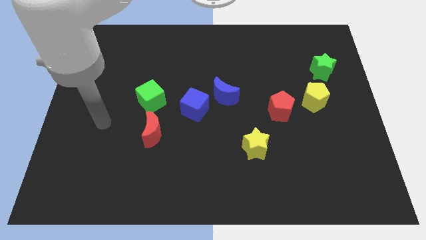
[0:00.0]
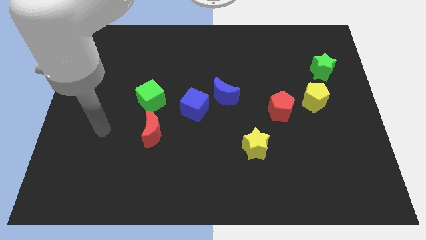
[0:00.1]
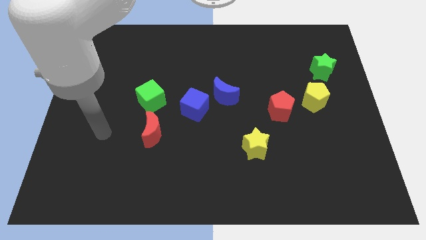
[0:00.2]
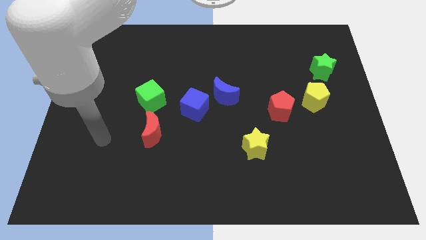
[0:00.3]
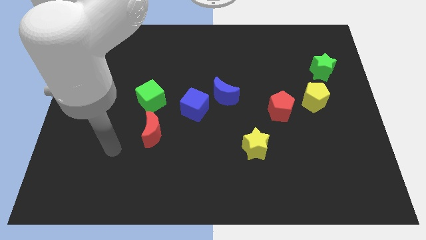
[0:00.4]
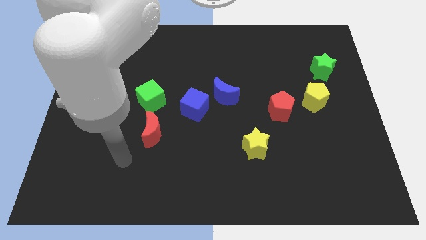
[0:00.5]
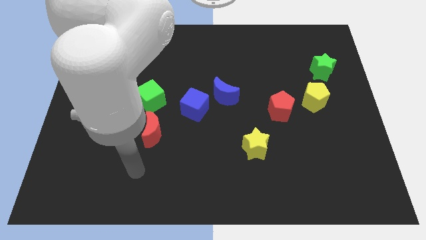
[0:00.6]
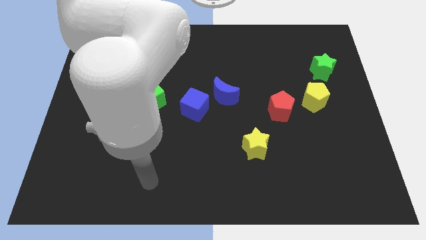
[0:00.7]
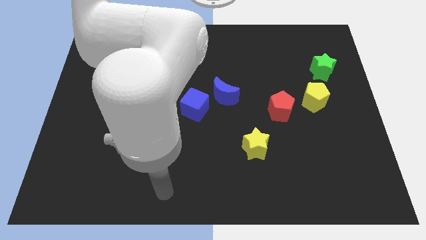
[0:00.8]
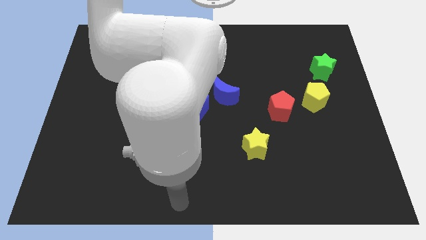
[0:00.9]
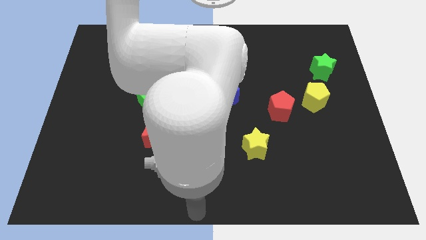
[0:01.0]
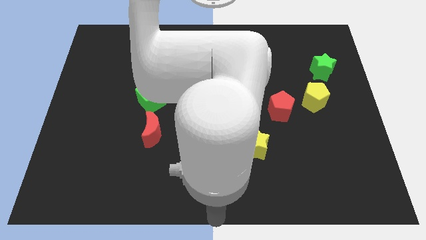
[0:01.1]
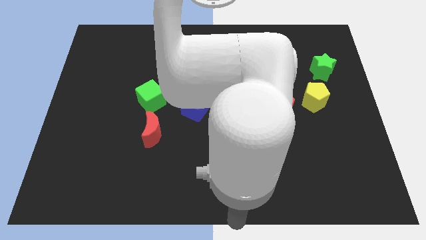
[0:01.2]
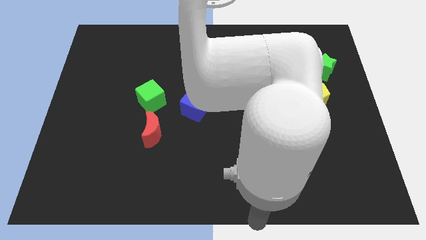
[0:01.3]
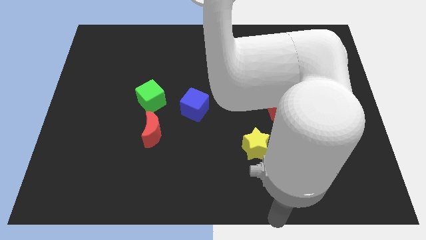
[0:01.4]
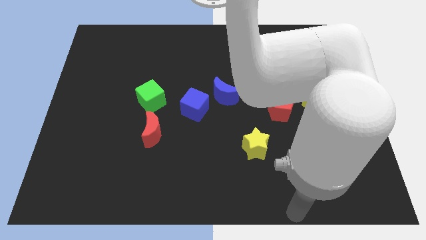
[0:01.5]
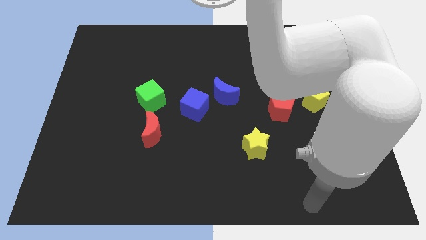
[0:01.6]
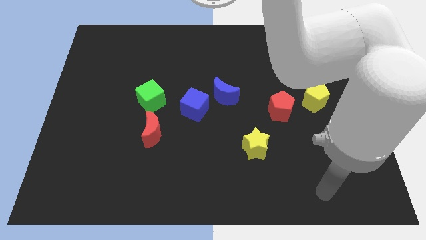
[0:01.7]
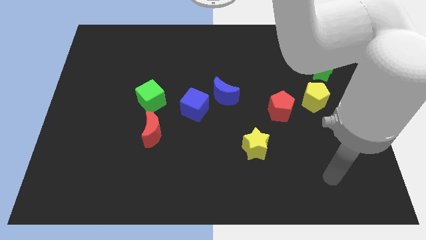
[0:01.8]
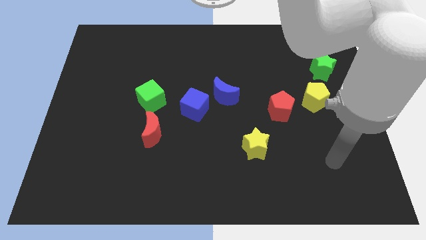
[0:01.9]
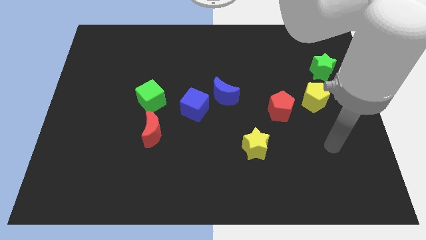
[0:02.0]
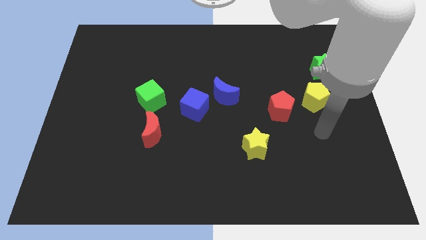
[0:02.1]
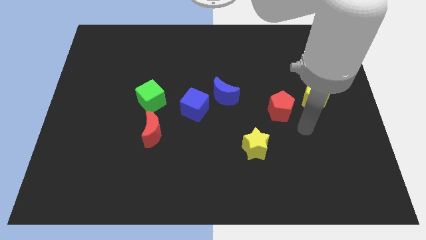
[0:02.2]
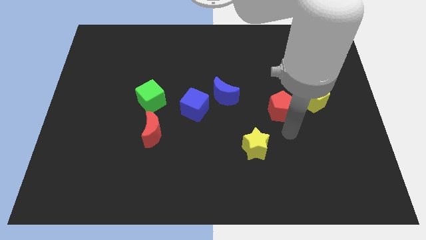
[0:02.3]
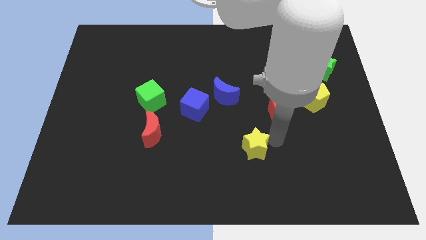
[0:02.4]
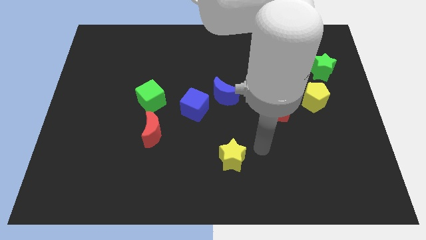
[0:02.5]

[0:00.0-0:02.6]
place yellow star below blue crescent

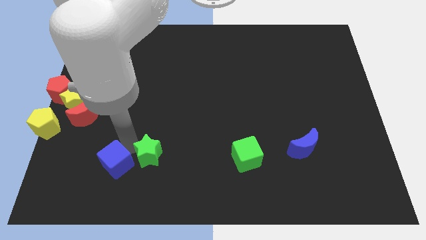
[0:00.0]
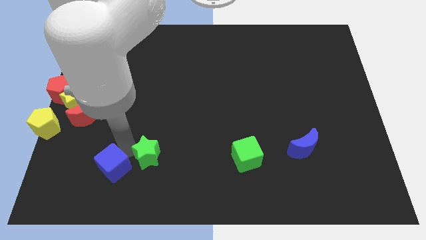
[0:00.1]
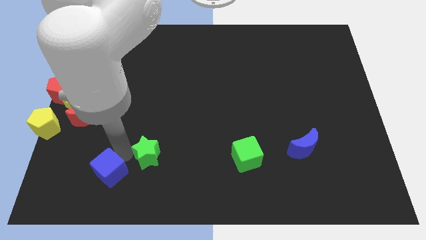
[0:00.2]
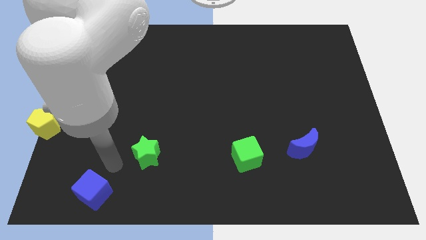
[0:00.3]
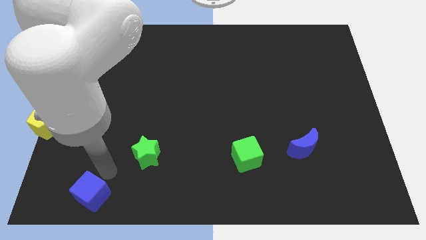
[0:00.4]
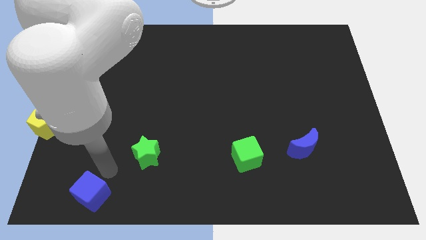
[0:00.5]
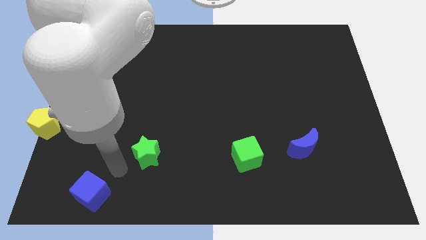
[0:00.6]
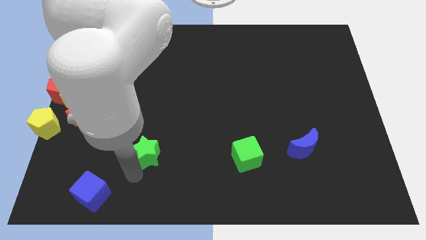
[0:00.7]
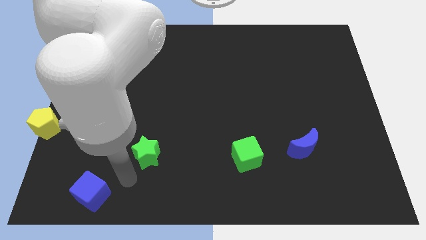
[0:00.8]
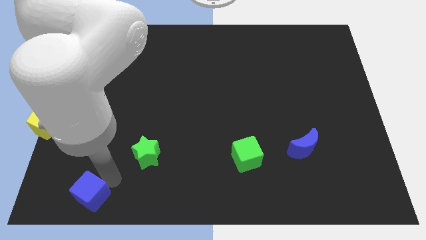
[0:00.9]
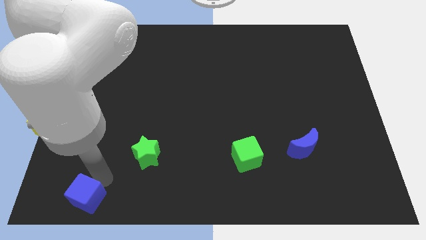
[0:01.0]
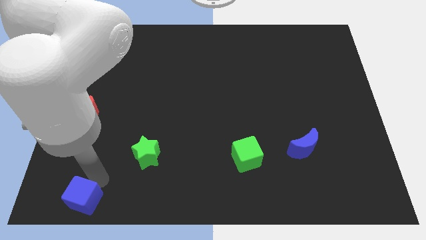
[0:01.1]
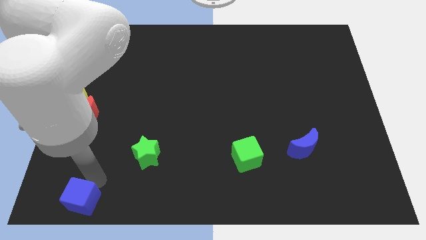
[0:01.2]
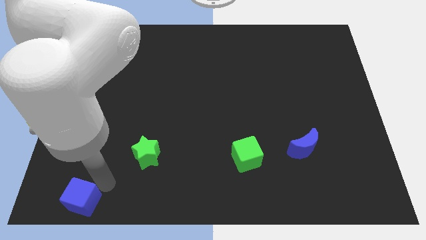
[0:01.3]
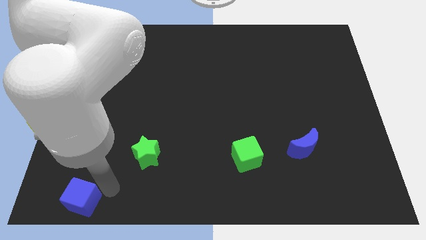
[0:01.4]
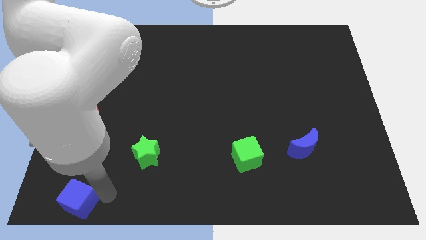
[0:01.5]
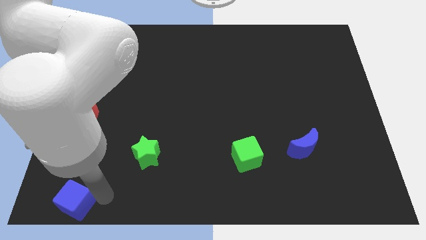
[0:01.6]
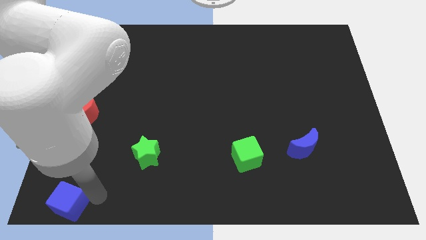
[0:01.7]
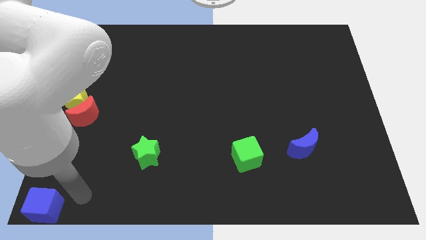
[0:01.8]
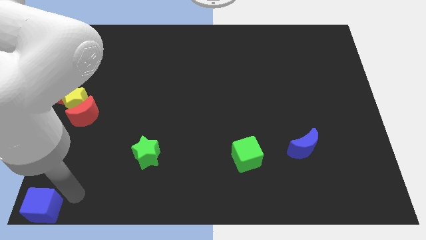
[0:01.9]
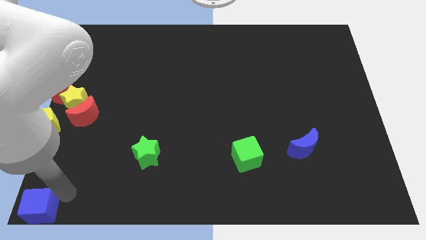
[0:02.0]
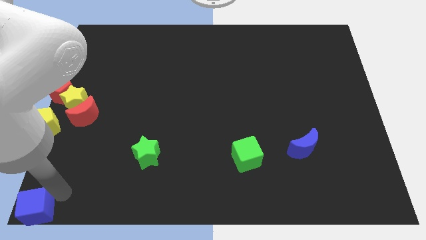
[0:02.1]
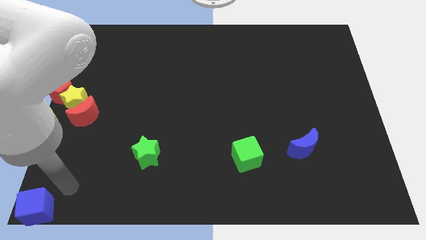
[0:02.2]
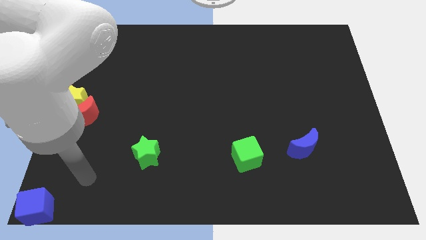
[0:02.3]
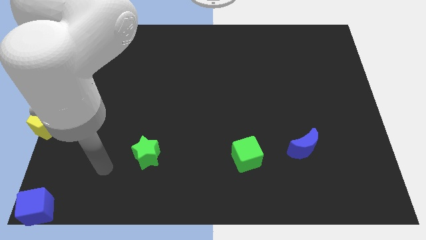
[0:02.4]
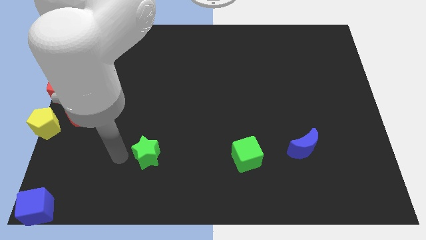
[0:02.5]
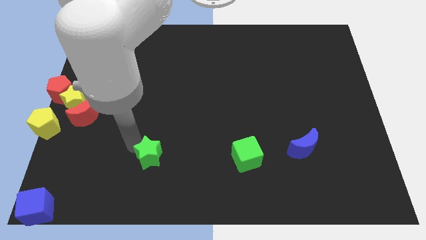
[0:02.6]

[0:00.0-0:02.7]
push the blue cube to the bottom left corner of the board

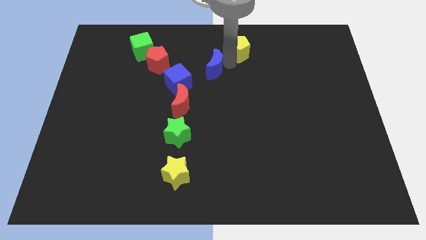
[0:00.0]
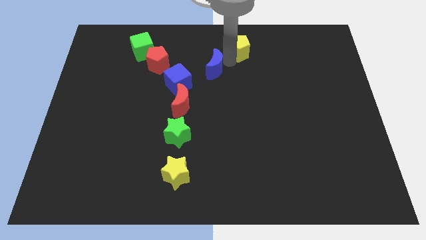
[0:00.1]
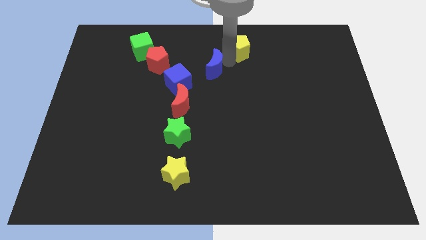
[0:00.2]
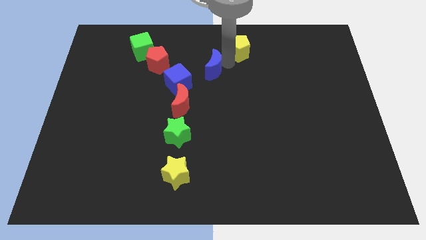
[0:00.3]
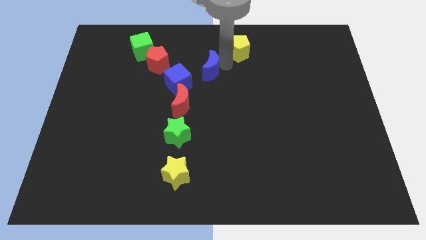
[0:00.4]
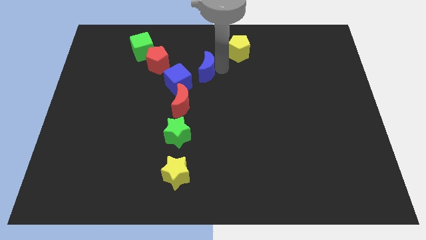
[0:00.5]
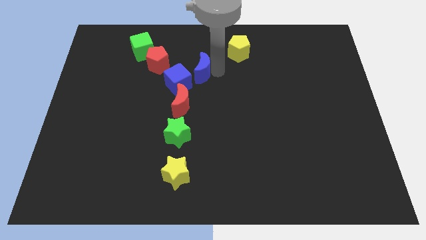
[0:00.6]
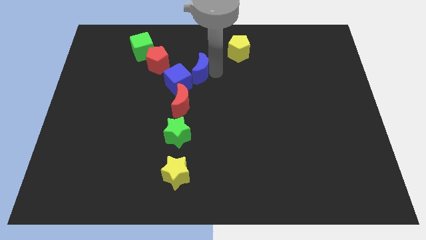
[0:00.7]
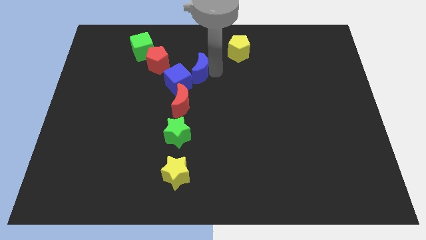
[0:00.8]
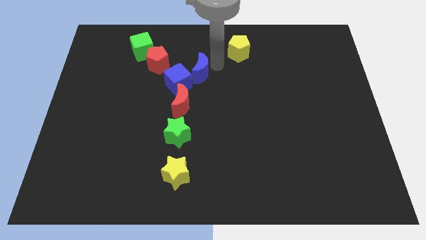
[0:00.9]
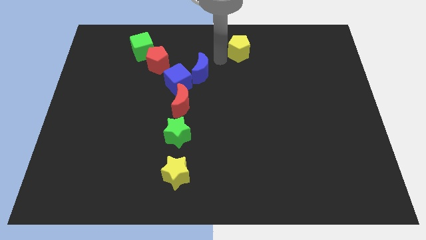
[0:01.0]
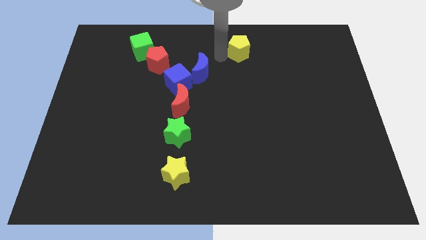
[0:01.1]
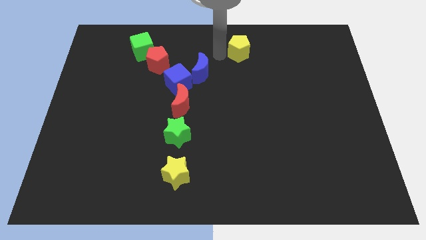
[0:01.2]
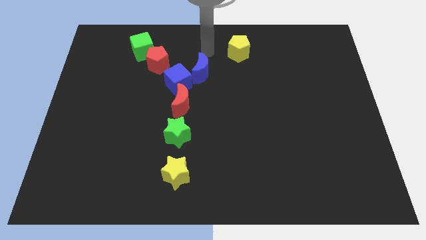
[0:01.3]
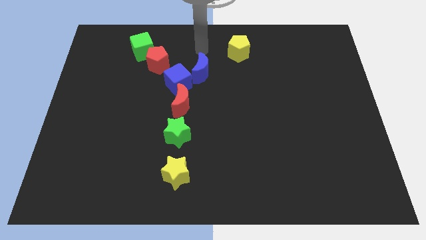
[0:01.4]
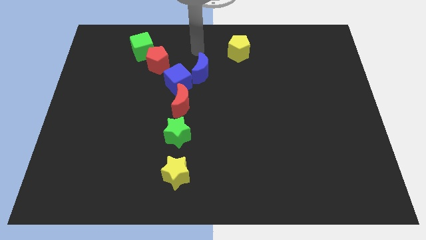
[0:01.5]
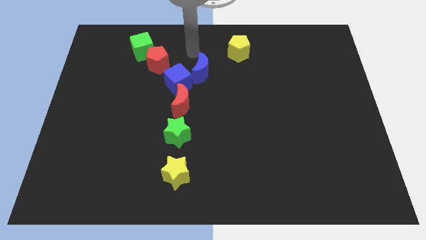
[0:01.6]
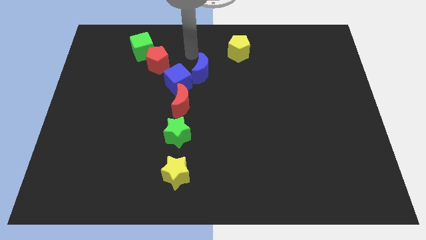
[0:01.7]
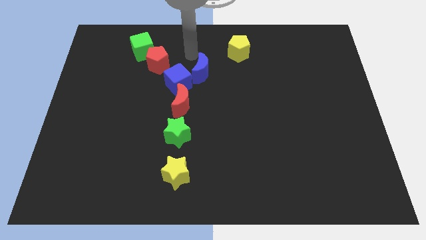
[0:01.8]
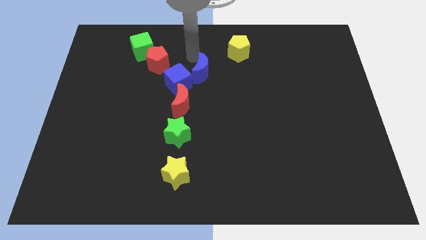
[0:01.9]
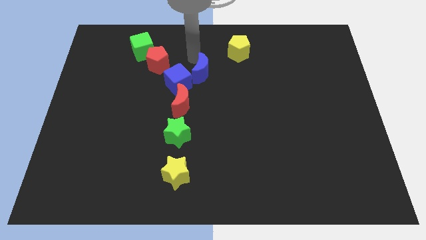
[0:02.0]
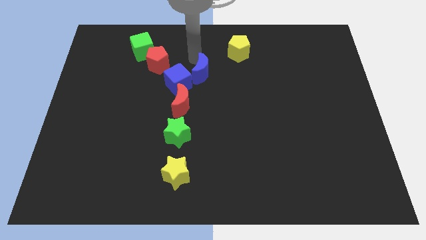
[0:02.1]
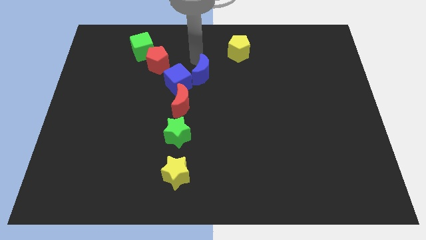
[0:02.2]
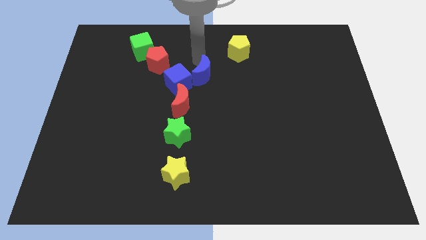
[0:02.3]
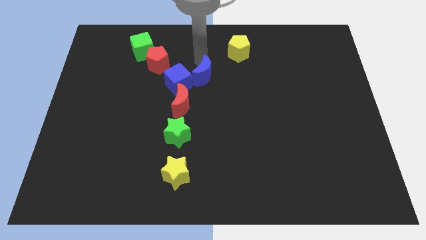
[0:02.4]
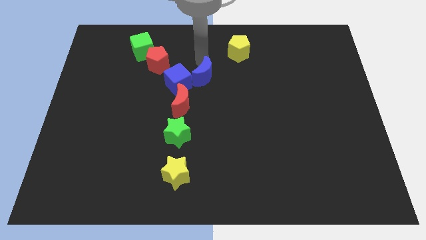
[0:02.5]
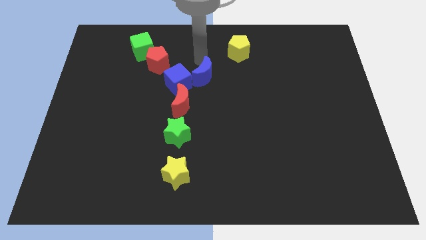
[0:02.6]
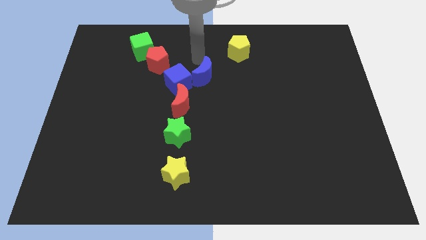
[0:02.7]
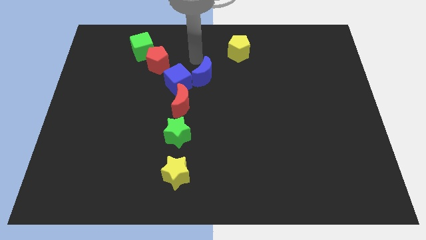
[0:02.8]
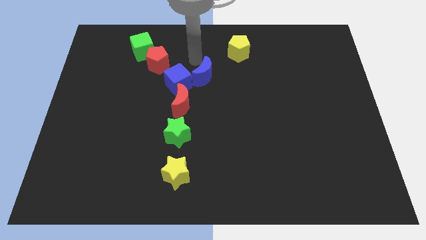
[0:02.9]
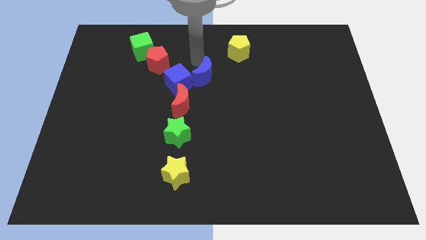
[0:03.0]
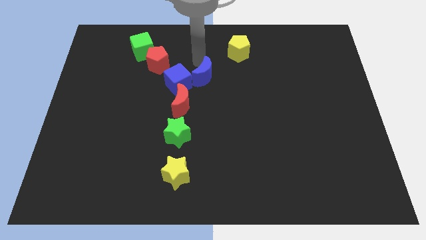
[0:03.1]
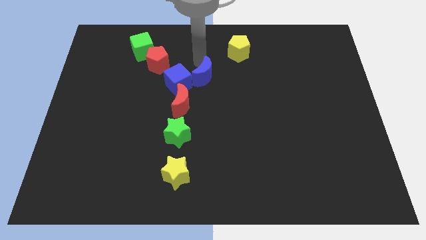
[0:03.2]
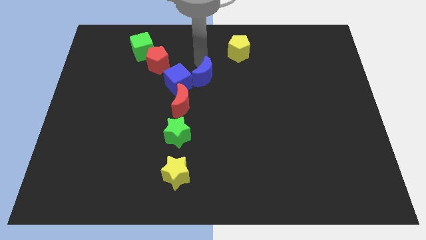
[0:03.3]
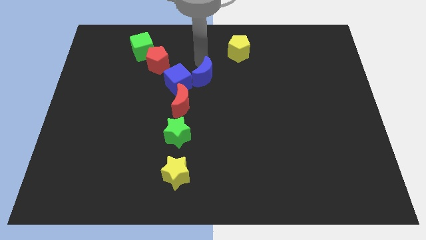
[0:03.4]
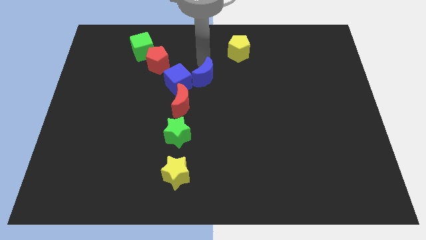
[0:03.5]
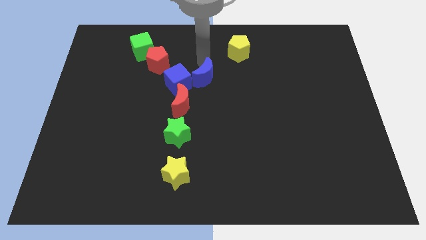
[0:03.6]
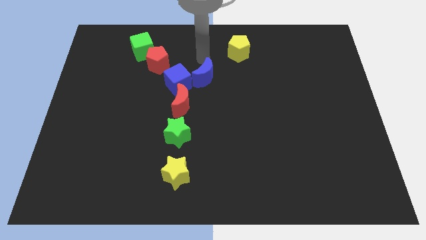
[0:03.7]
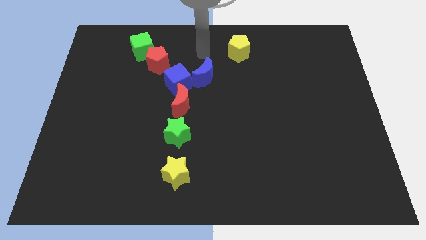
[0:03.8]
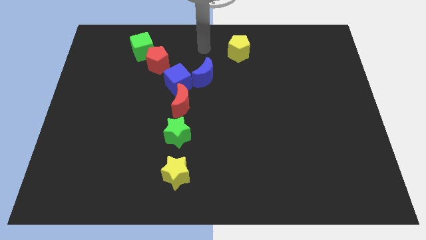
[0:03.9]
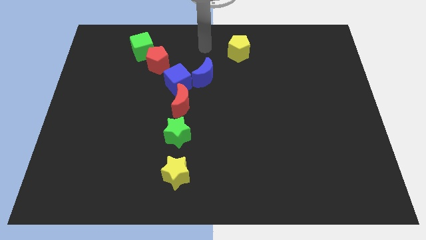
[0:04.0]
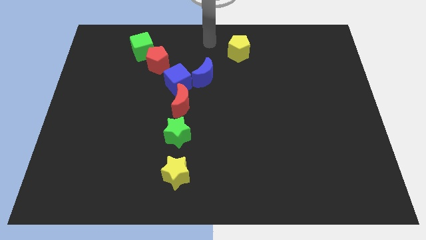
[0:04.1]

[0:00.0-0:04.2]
push the blue moon into the blue cube
